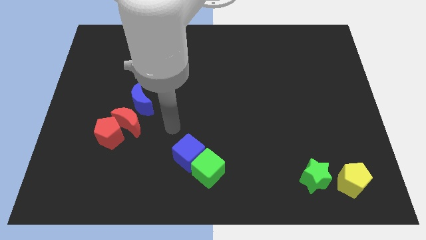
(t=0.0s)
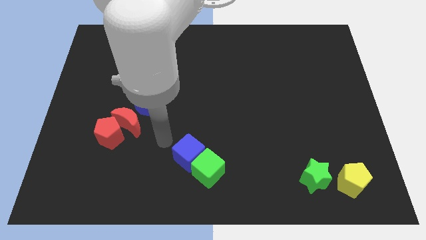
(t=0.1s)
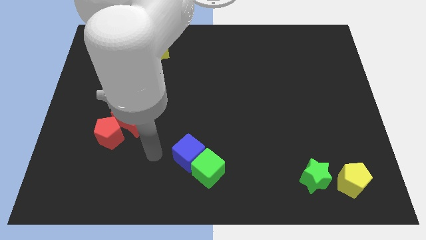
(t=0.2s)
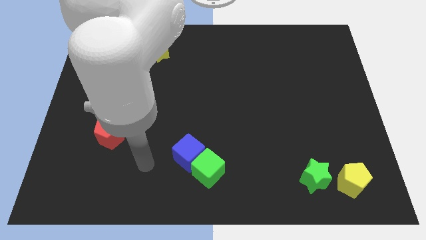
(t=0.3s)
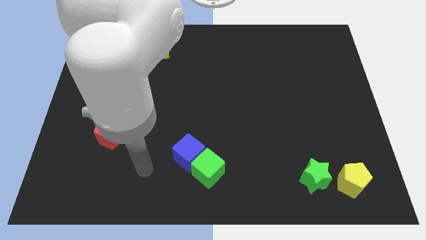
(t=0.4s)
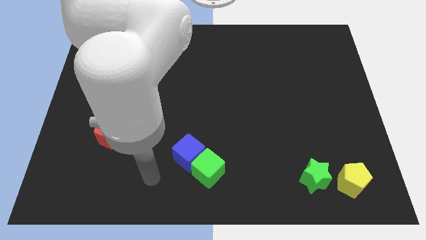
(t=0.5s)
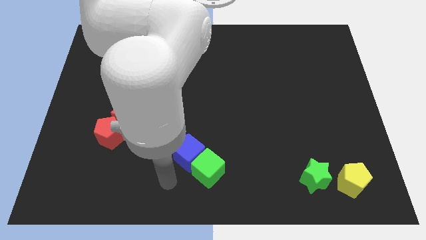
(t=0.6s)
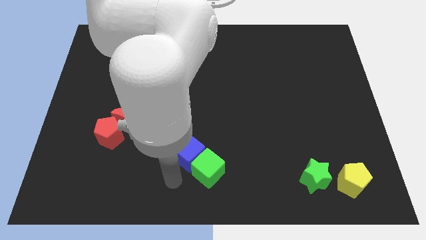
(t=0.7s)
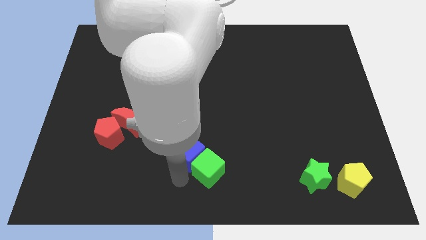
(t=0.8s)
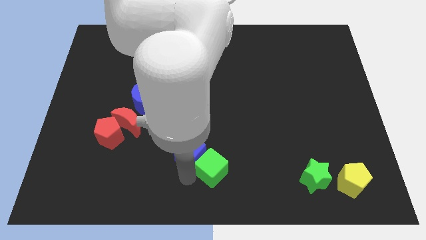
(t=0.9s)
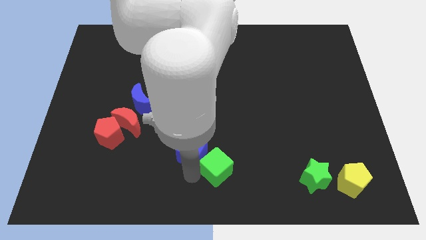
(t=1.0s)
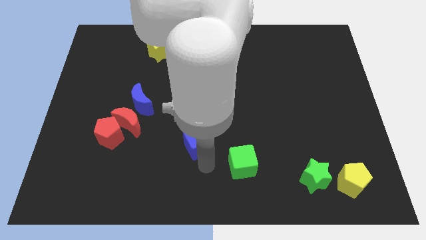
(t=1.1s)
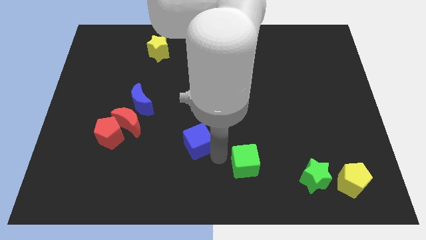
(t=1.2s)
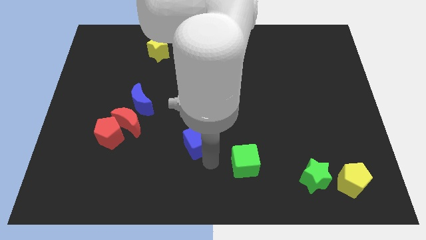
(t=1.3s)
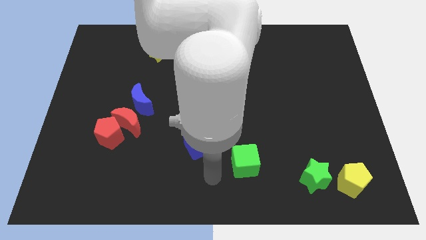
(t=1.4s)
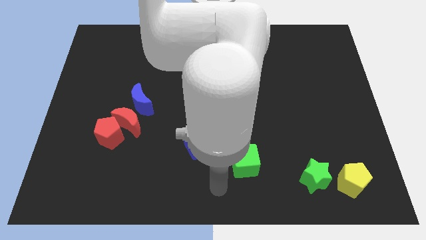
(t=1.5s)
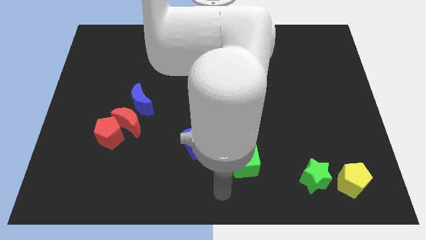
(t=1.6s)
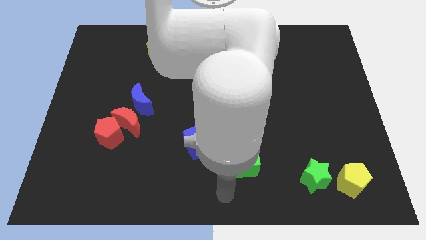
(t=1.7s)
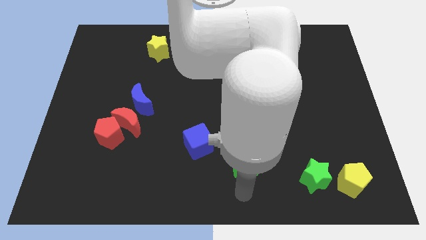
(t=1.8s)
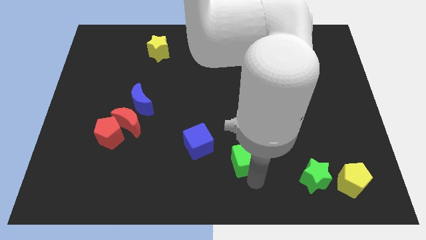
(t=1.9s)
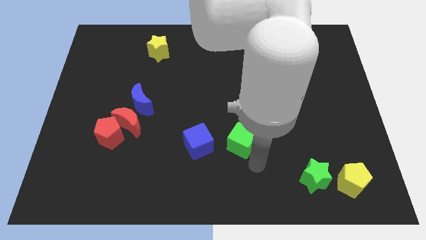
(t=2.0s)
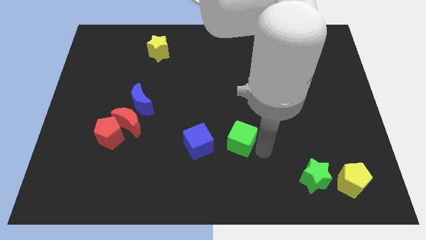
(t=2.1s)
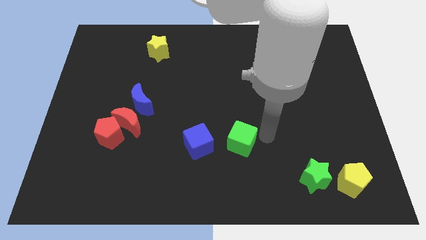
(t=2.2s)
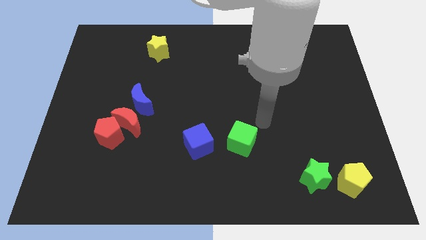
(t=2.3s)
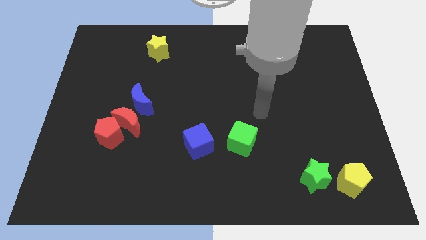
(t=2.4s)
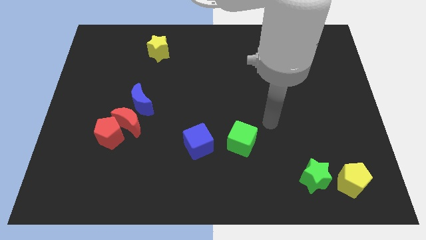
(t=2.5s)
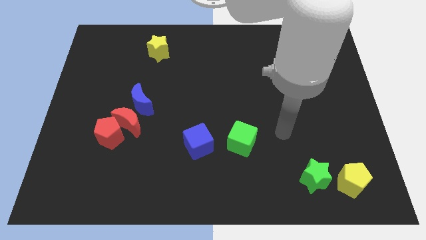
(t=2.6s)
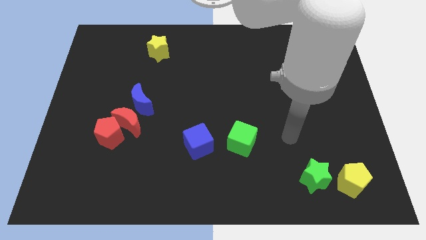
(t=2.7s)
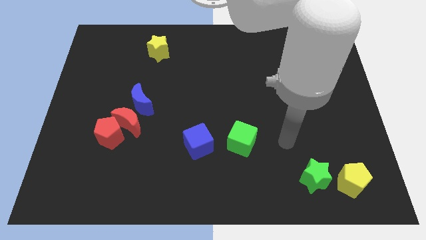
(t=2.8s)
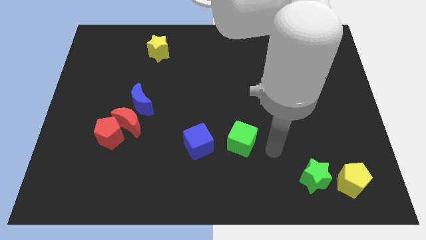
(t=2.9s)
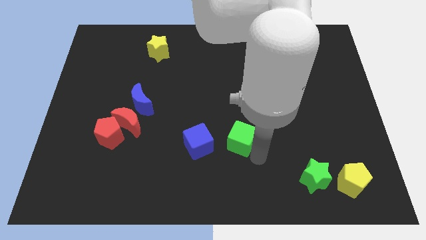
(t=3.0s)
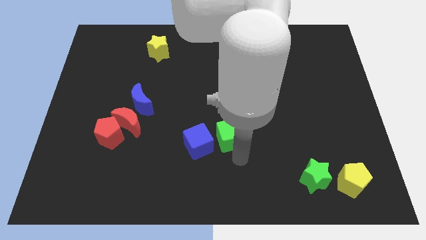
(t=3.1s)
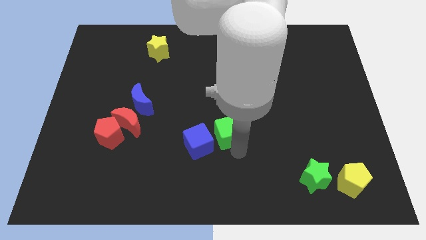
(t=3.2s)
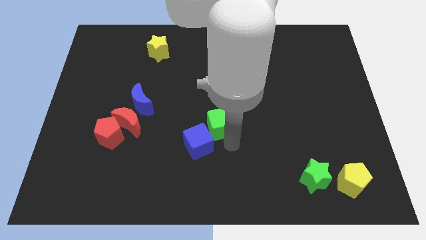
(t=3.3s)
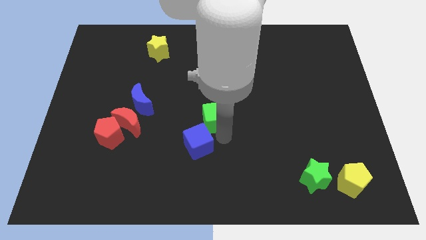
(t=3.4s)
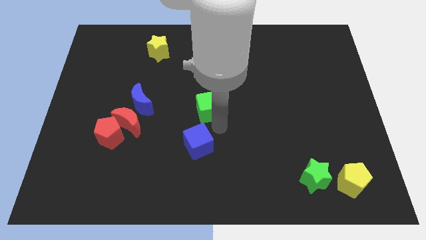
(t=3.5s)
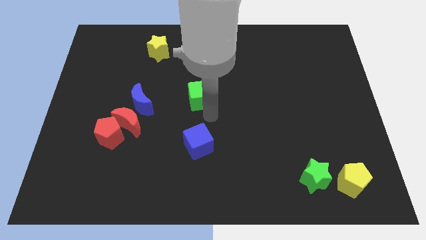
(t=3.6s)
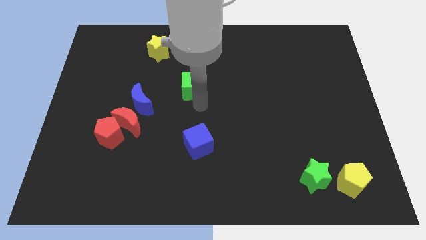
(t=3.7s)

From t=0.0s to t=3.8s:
place green cube to the top of blue cube

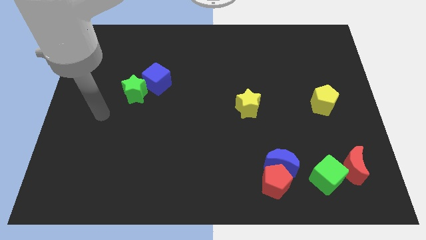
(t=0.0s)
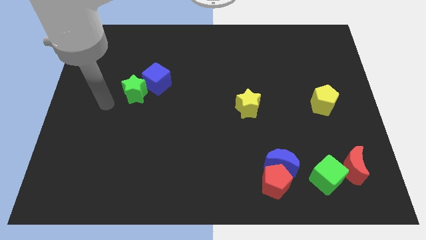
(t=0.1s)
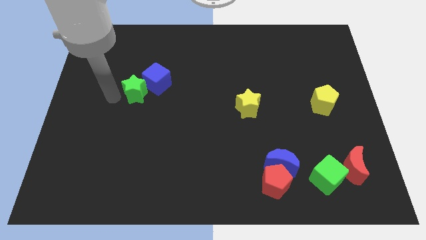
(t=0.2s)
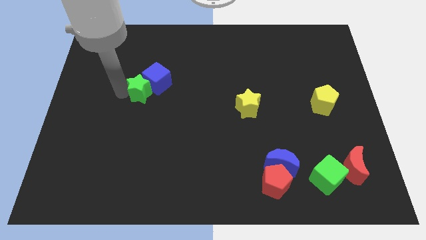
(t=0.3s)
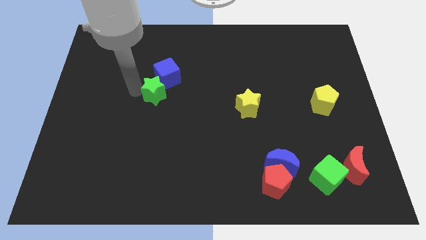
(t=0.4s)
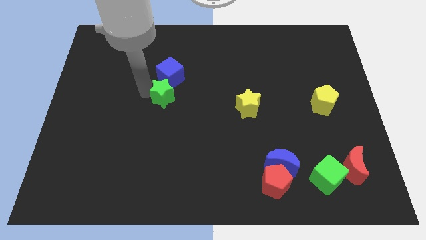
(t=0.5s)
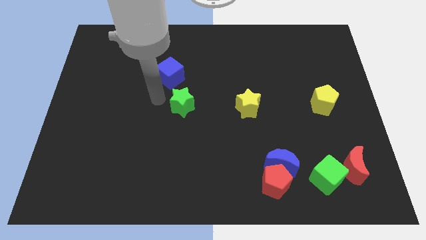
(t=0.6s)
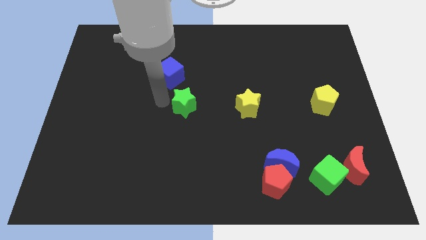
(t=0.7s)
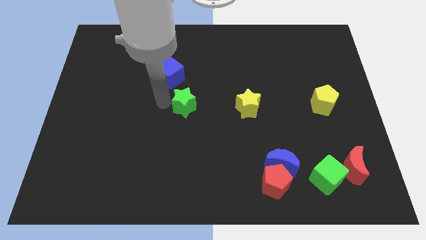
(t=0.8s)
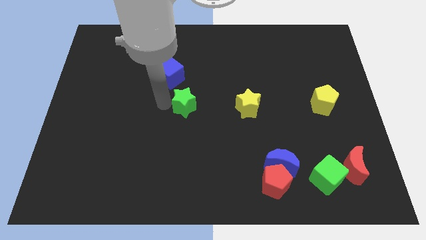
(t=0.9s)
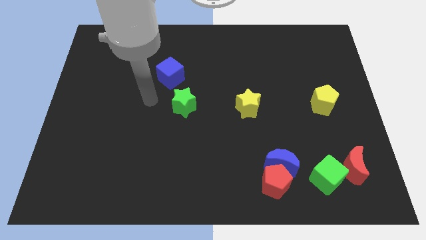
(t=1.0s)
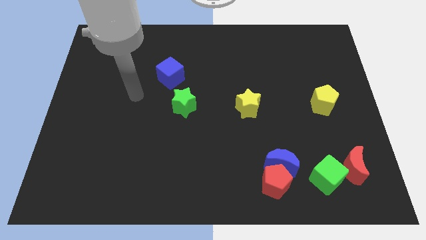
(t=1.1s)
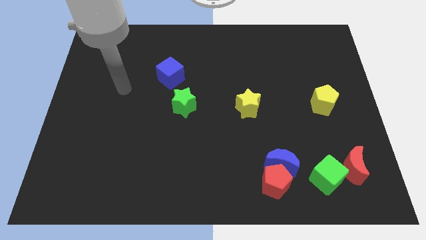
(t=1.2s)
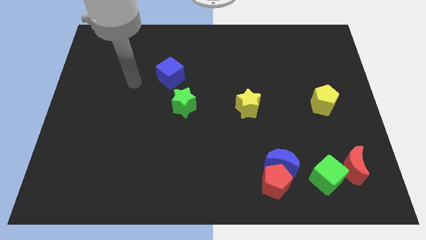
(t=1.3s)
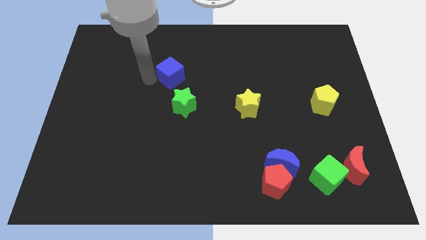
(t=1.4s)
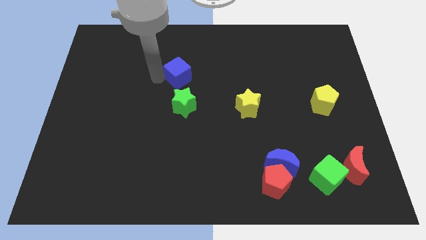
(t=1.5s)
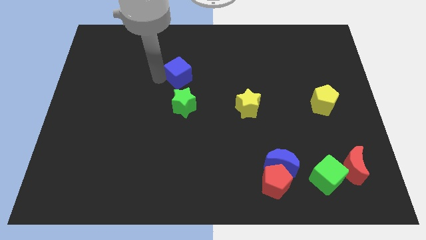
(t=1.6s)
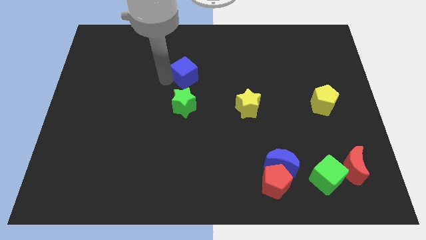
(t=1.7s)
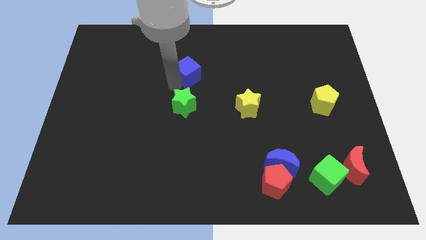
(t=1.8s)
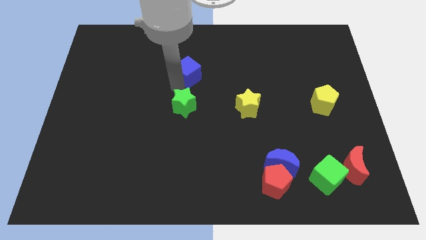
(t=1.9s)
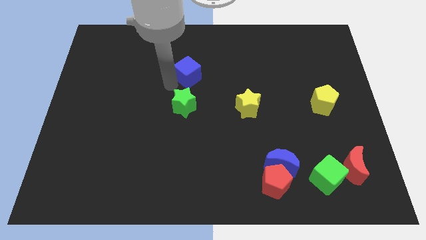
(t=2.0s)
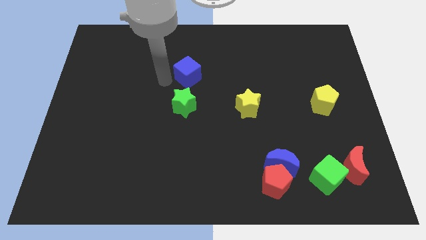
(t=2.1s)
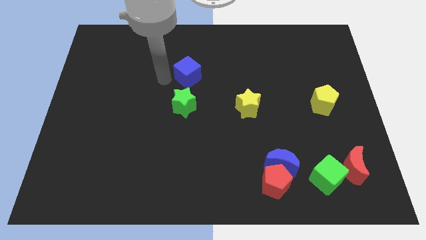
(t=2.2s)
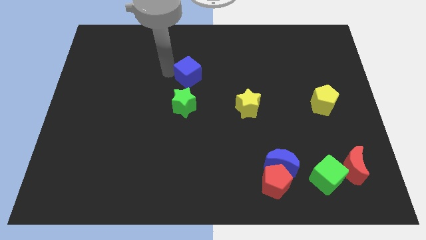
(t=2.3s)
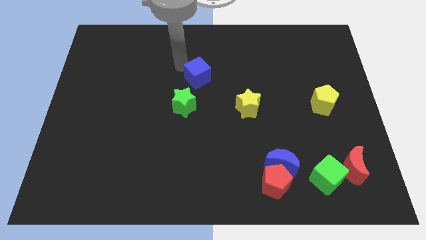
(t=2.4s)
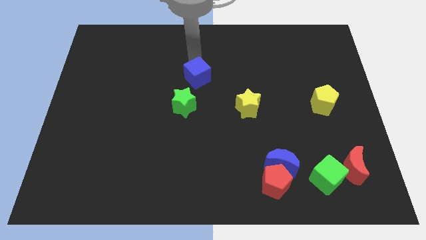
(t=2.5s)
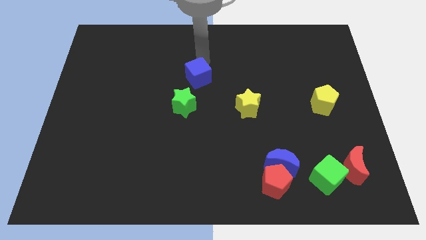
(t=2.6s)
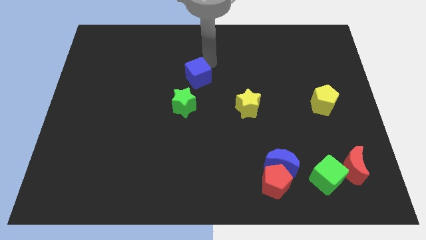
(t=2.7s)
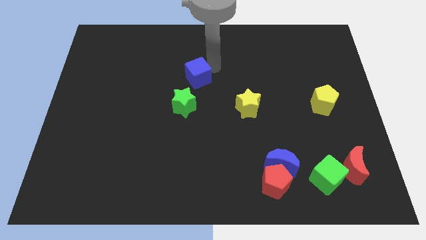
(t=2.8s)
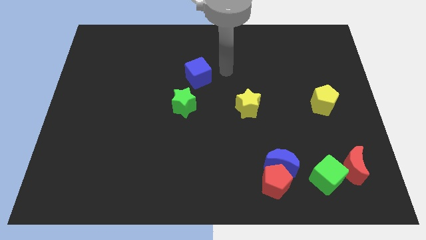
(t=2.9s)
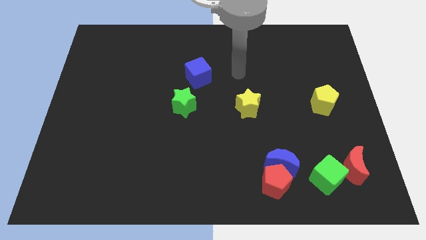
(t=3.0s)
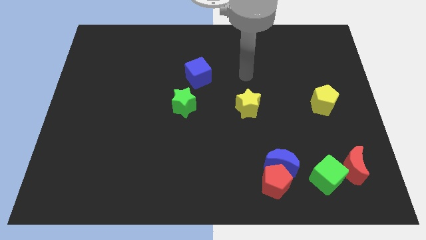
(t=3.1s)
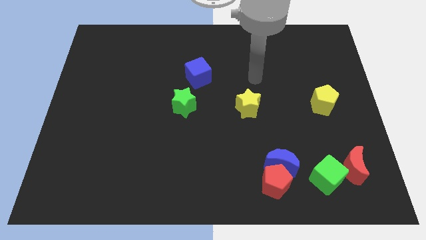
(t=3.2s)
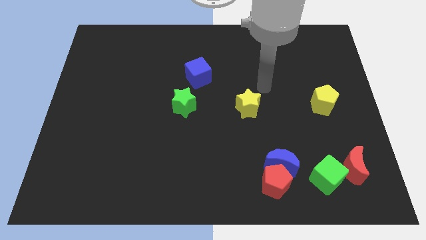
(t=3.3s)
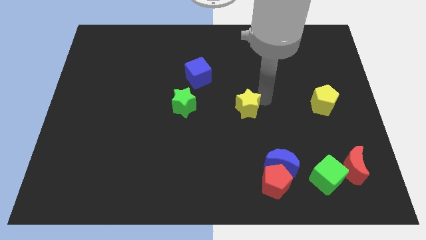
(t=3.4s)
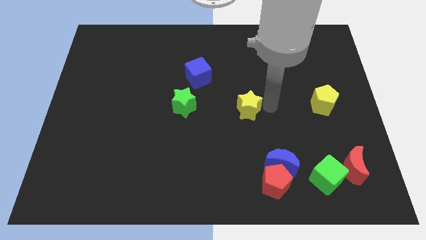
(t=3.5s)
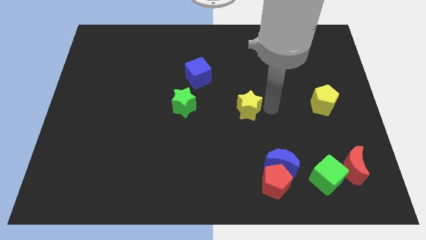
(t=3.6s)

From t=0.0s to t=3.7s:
move the green star to the center of the board

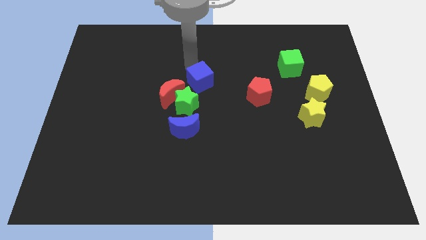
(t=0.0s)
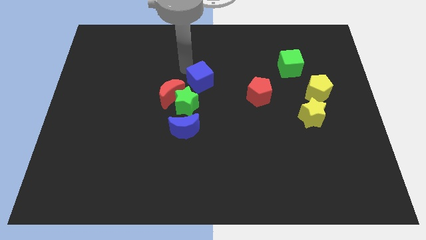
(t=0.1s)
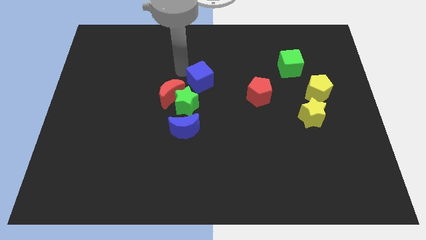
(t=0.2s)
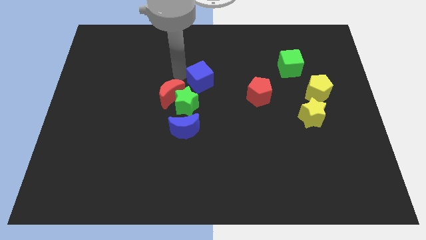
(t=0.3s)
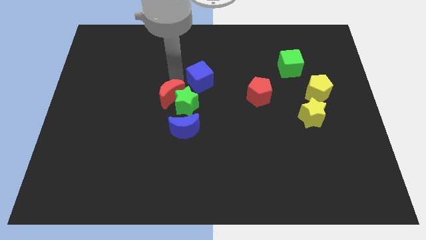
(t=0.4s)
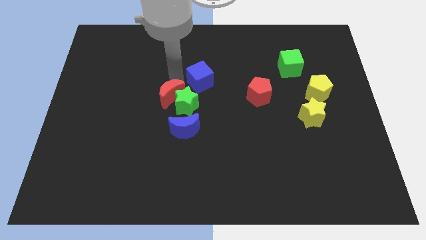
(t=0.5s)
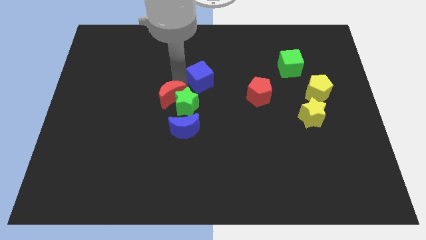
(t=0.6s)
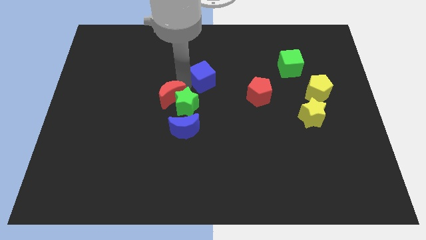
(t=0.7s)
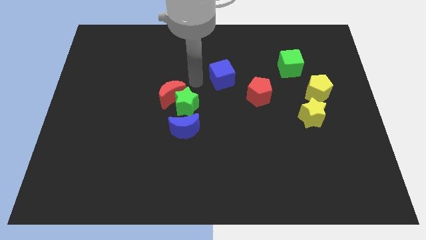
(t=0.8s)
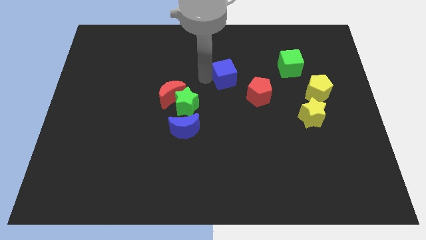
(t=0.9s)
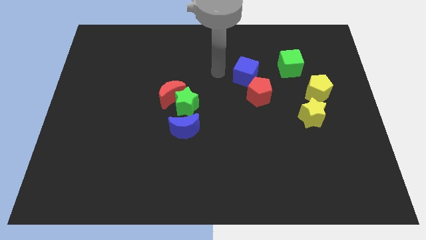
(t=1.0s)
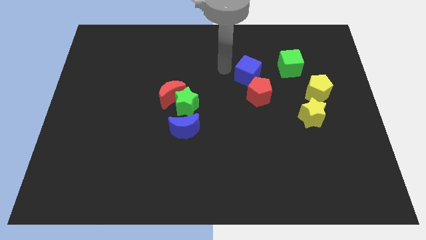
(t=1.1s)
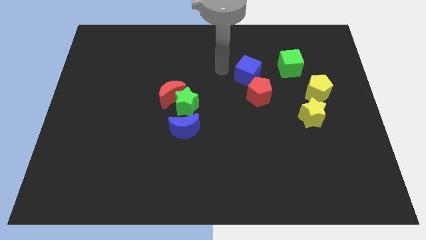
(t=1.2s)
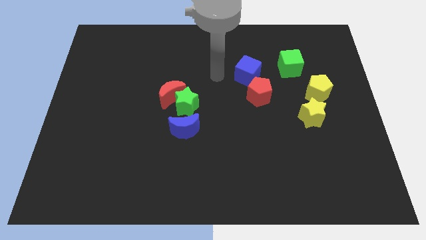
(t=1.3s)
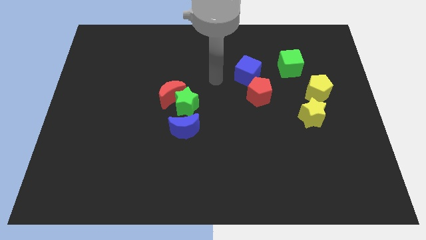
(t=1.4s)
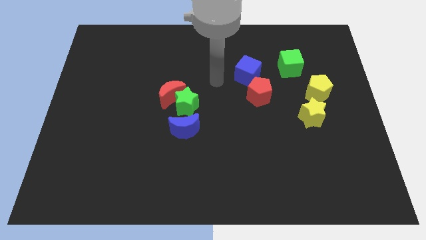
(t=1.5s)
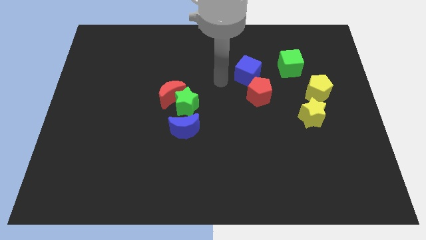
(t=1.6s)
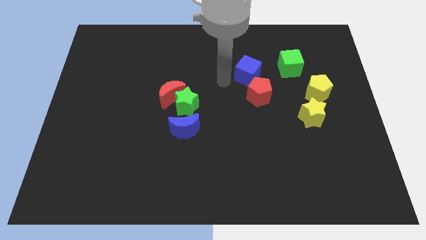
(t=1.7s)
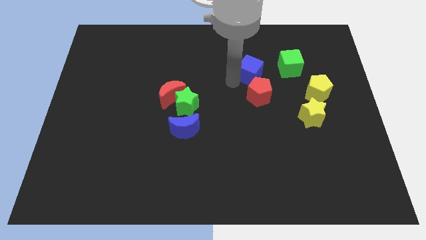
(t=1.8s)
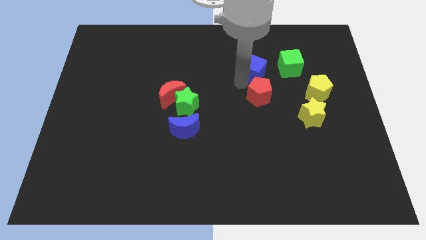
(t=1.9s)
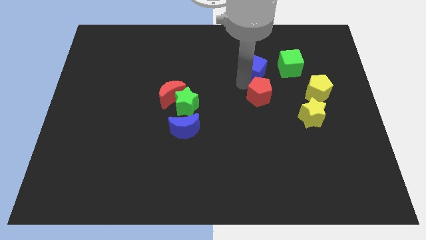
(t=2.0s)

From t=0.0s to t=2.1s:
place the blue cube above the red pentagon
